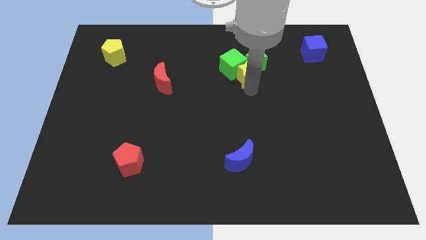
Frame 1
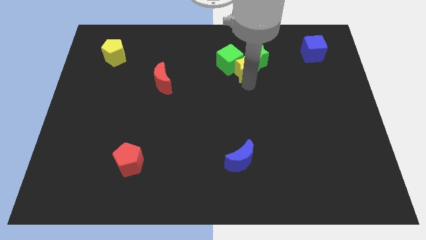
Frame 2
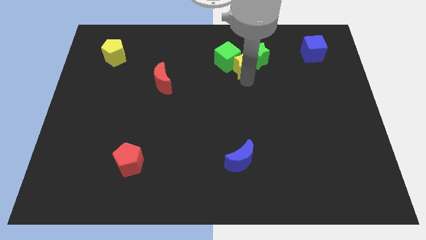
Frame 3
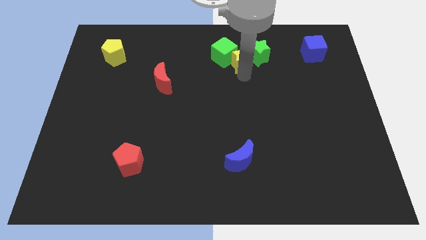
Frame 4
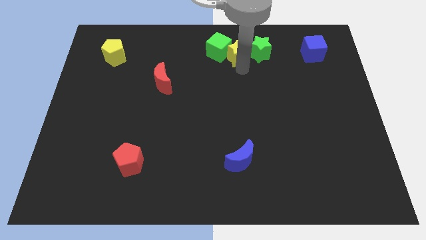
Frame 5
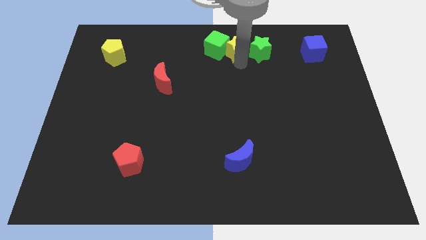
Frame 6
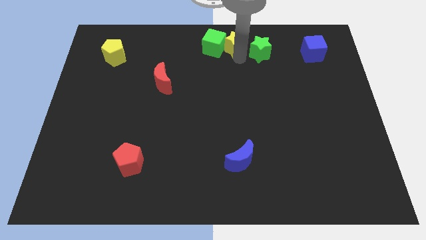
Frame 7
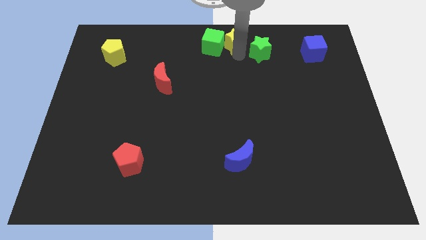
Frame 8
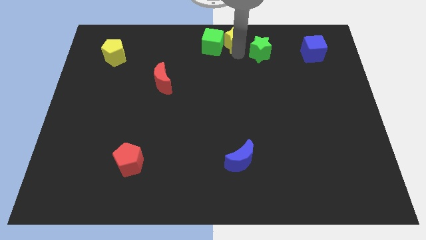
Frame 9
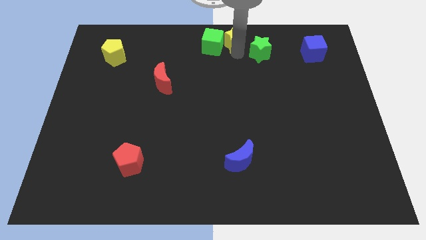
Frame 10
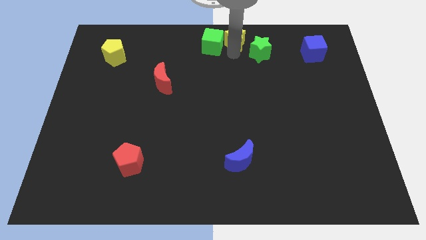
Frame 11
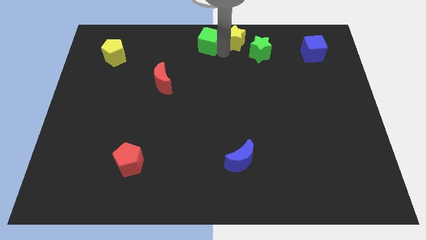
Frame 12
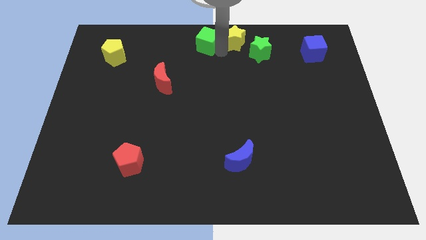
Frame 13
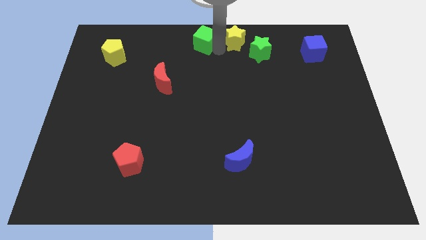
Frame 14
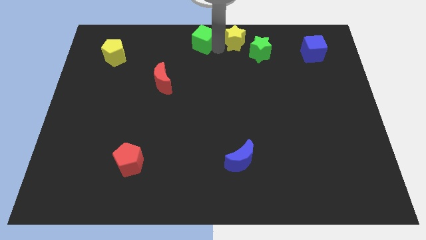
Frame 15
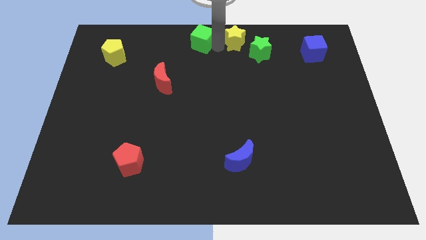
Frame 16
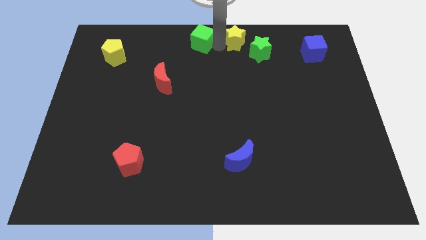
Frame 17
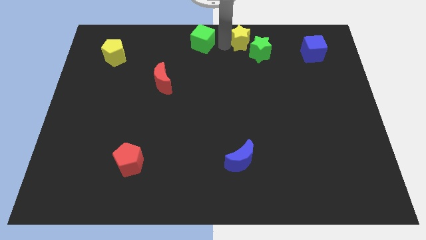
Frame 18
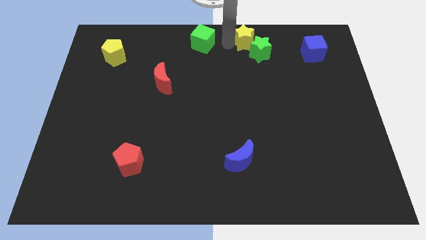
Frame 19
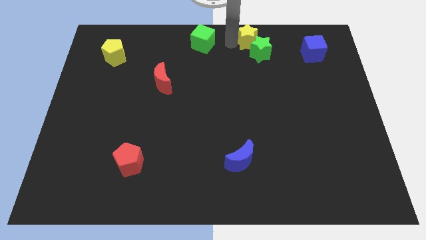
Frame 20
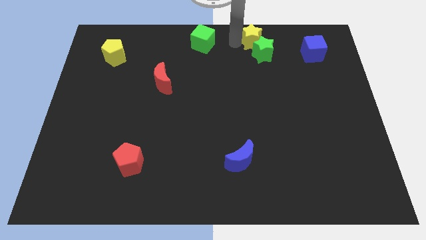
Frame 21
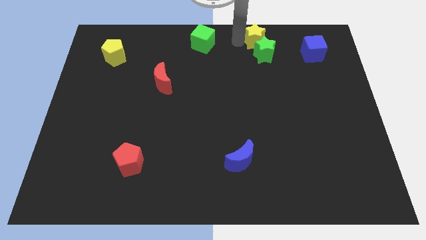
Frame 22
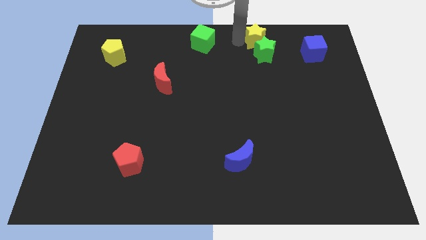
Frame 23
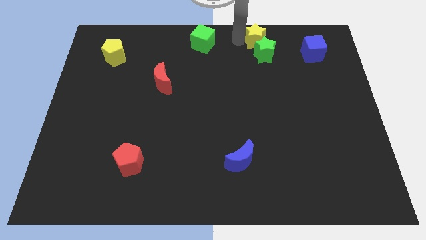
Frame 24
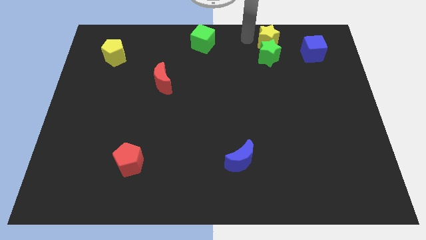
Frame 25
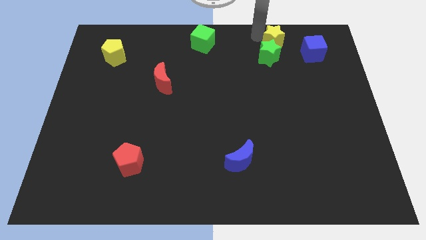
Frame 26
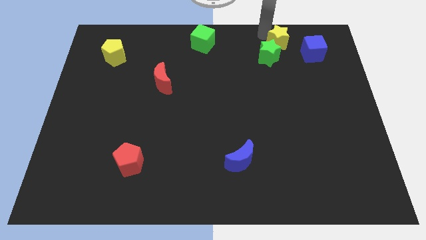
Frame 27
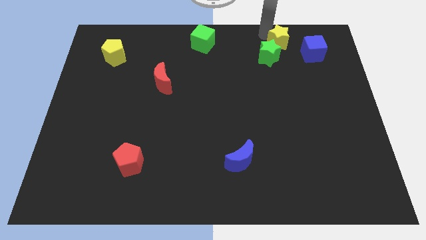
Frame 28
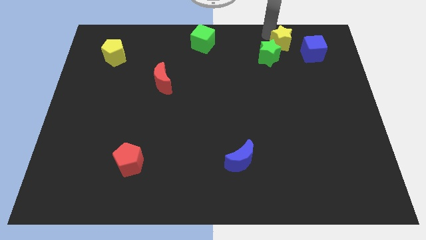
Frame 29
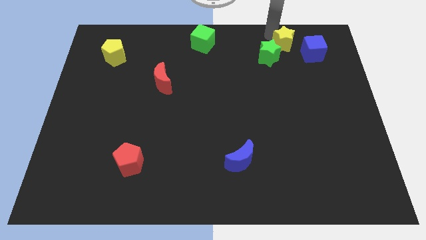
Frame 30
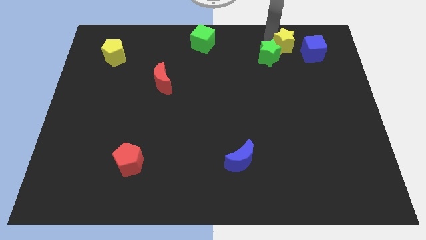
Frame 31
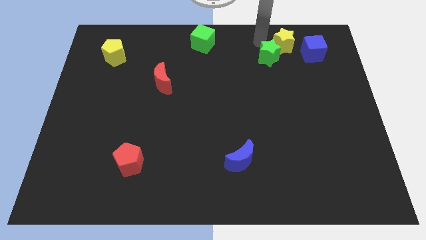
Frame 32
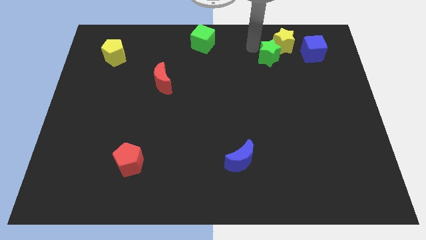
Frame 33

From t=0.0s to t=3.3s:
place yellow star above green star

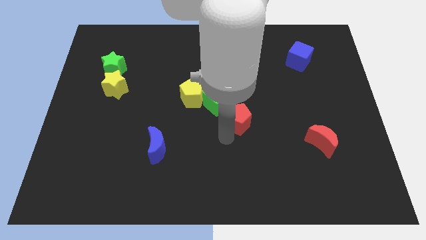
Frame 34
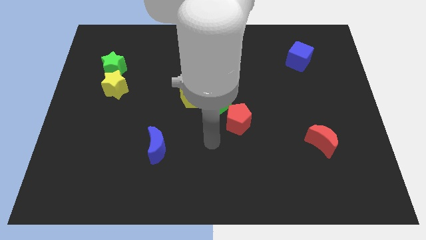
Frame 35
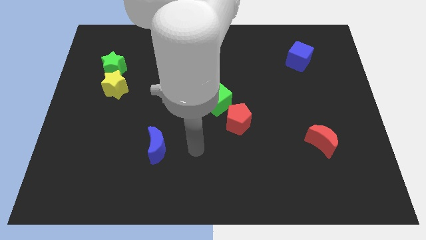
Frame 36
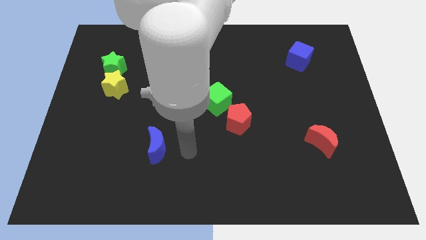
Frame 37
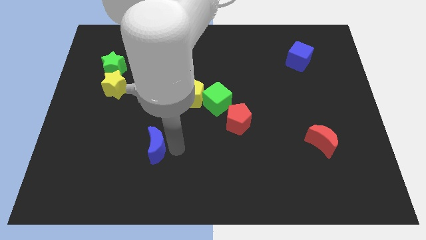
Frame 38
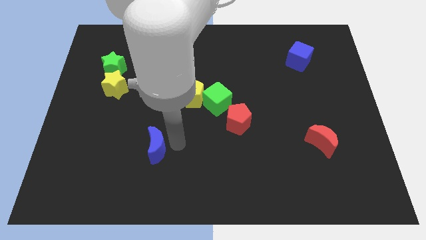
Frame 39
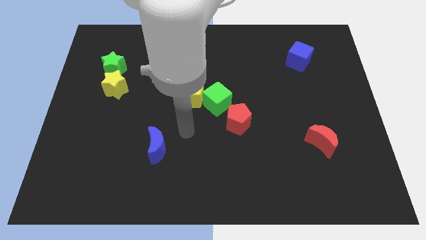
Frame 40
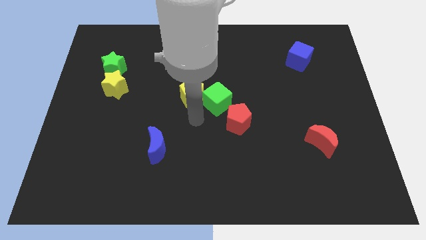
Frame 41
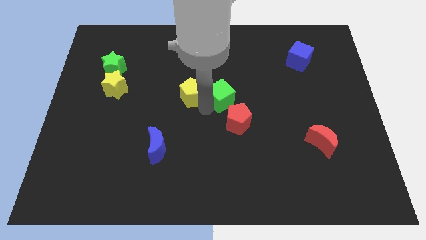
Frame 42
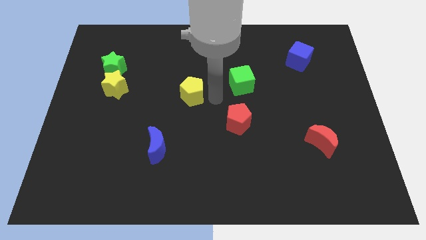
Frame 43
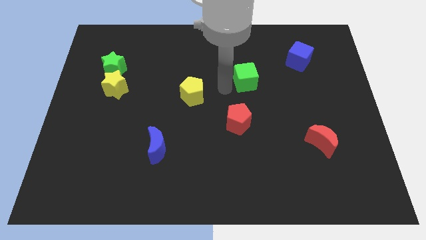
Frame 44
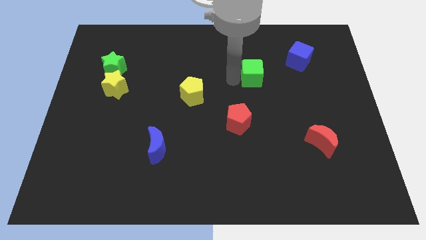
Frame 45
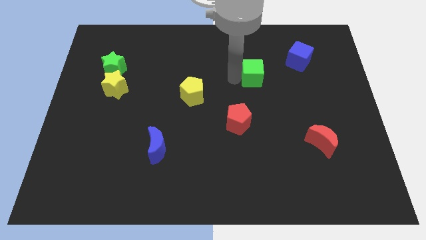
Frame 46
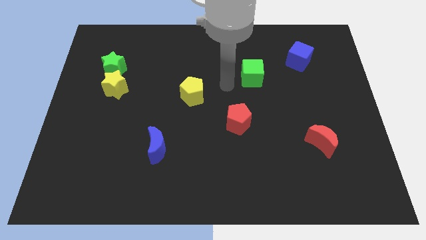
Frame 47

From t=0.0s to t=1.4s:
move away from the red pentagon

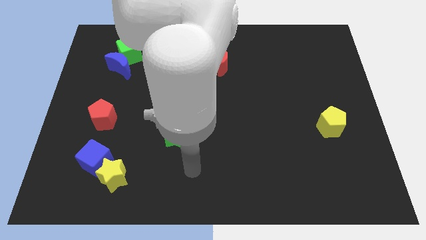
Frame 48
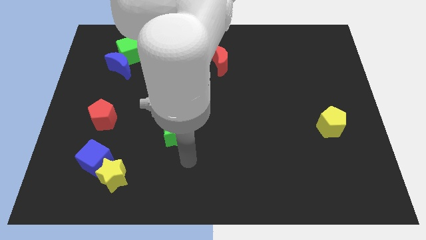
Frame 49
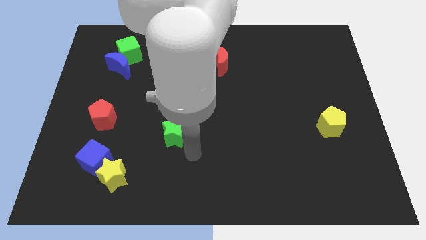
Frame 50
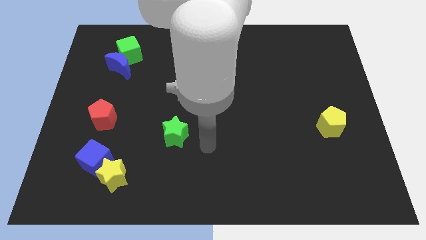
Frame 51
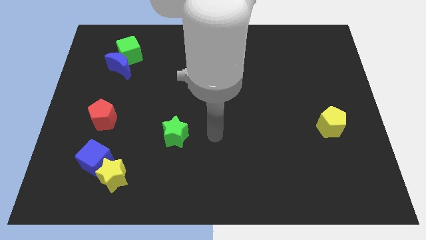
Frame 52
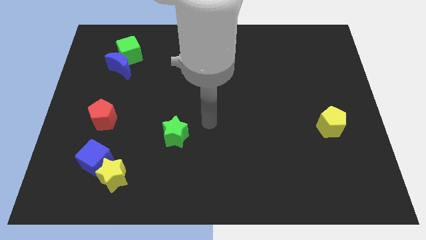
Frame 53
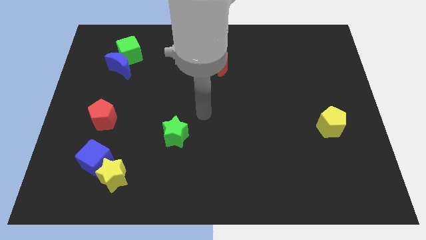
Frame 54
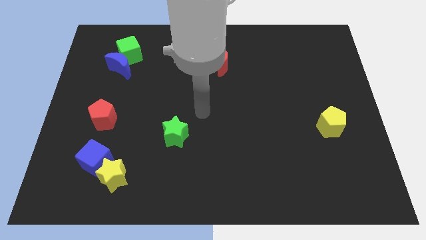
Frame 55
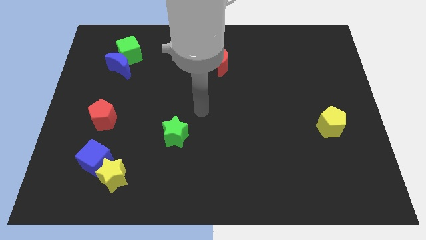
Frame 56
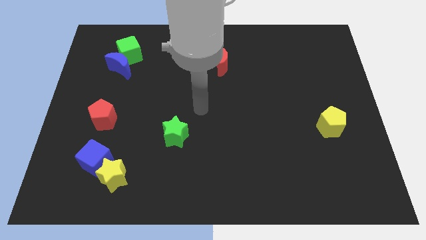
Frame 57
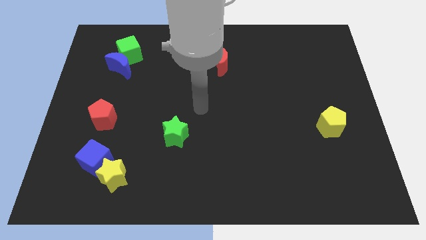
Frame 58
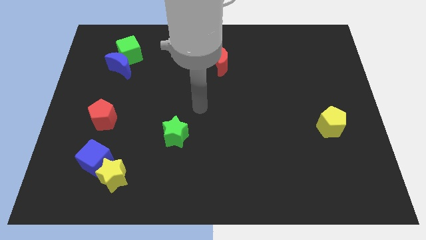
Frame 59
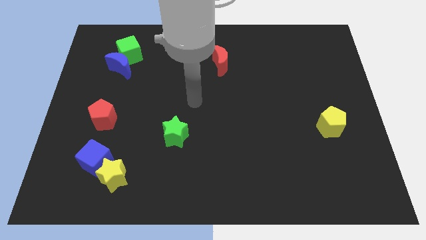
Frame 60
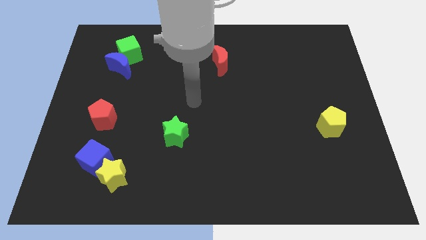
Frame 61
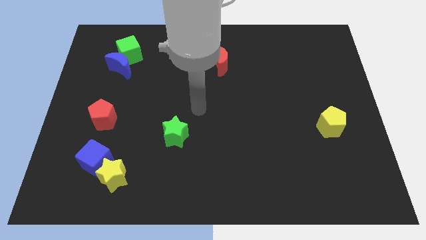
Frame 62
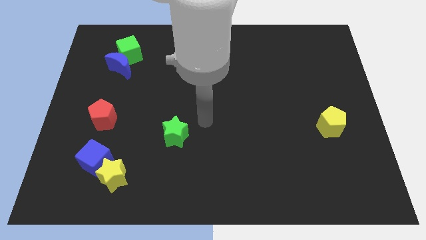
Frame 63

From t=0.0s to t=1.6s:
move your arm diagonally top right to the green star

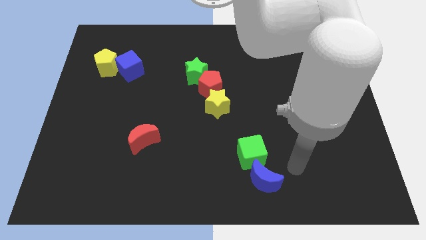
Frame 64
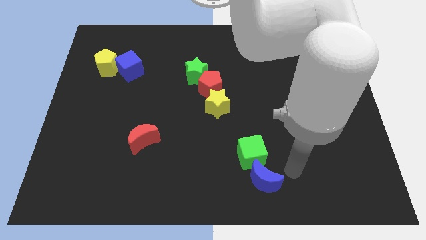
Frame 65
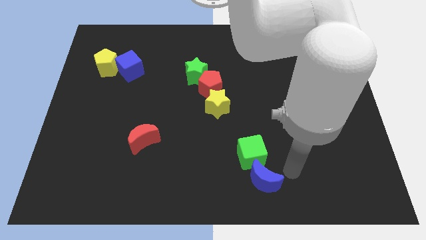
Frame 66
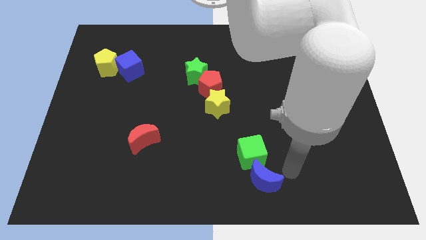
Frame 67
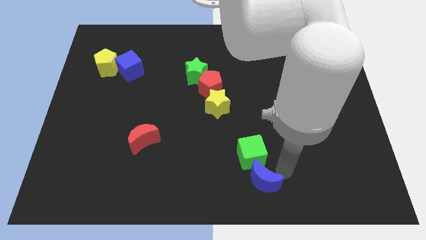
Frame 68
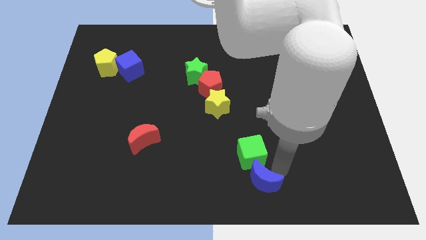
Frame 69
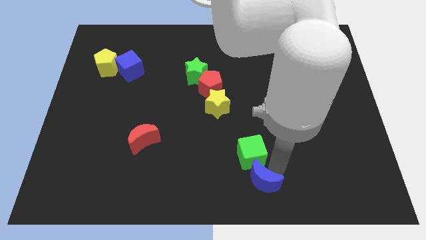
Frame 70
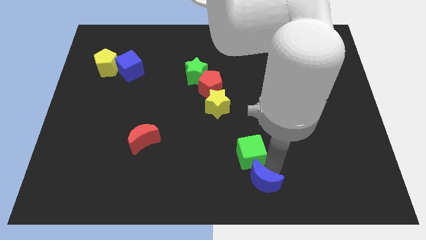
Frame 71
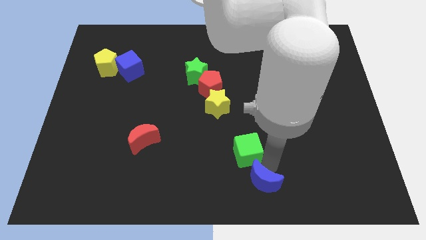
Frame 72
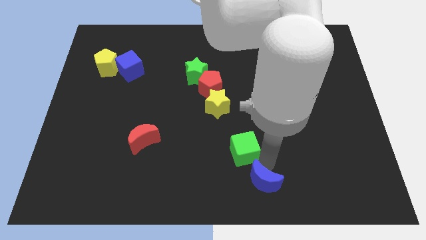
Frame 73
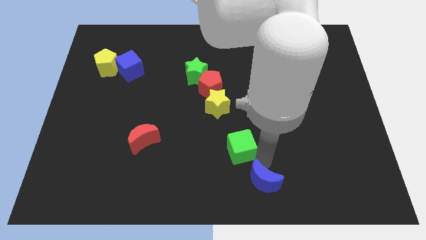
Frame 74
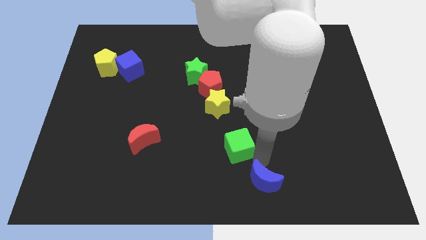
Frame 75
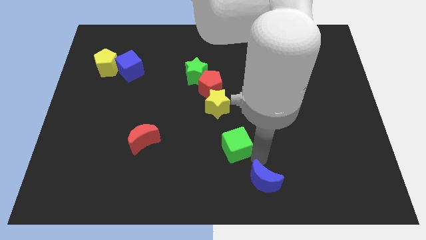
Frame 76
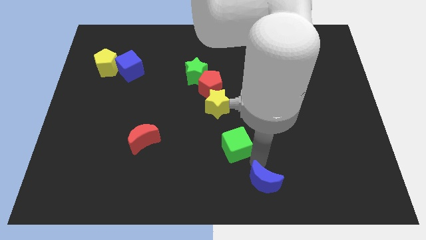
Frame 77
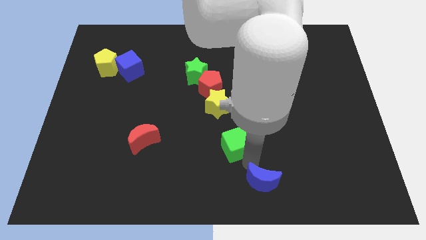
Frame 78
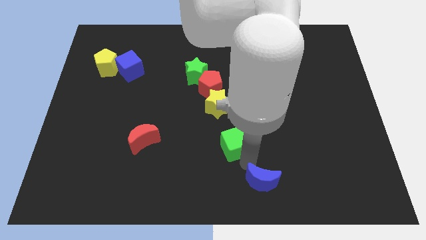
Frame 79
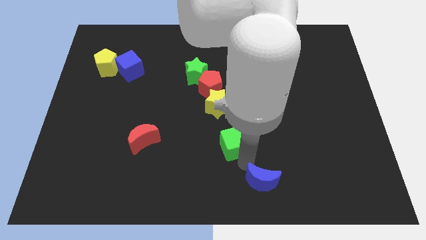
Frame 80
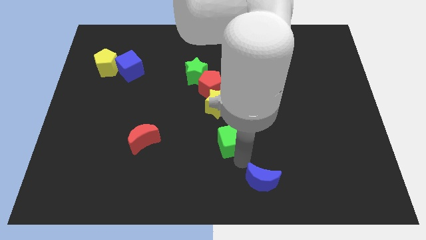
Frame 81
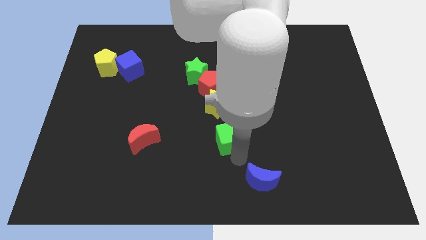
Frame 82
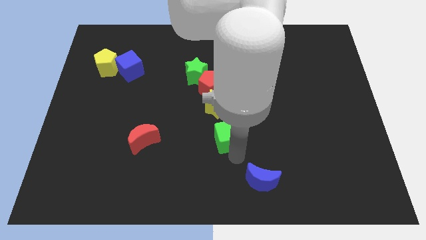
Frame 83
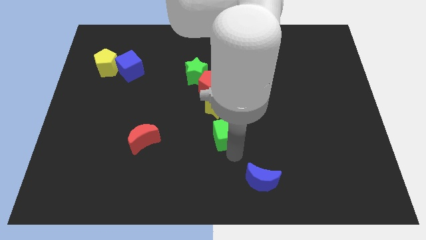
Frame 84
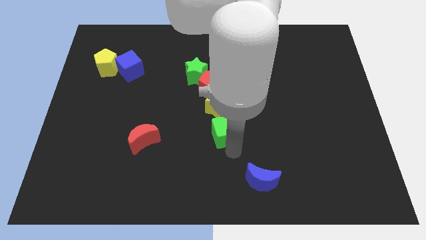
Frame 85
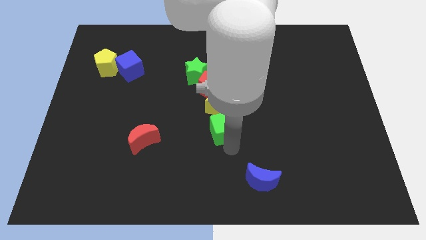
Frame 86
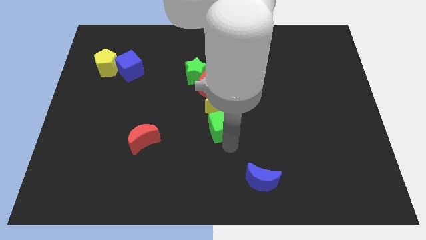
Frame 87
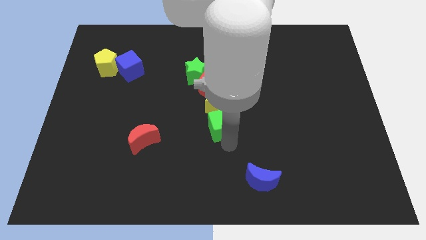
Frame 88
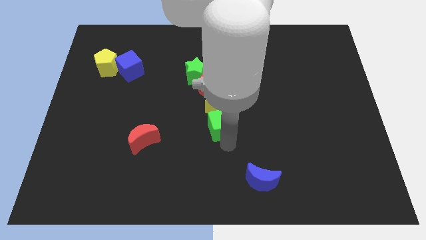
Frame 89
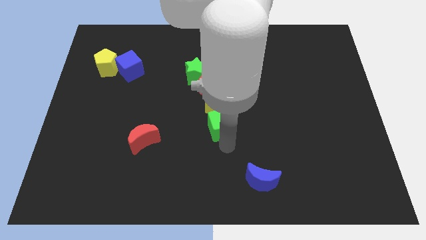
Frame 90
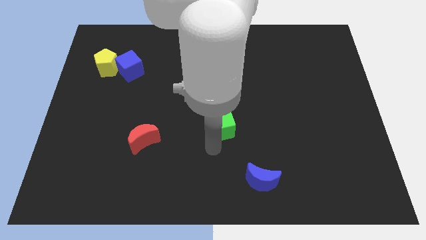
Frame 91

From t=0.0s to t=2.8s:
separate the green cube towards the bottom of yellow star
